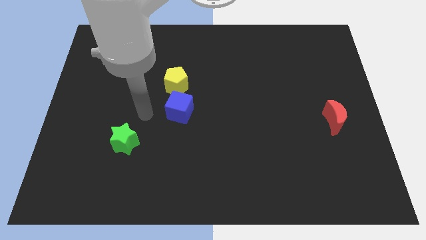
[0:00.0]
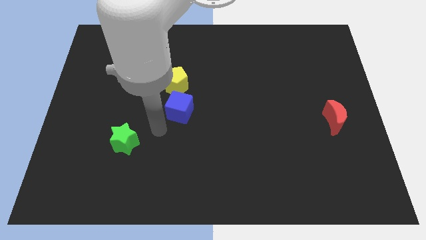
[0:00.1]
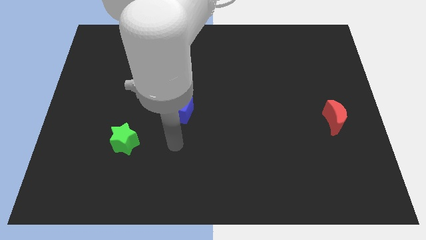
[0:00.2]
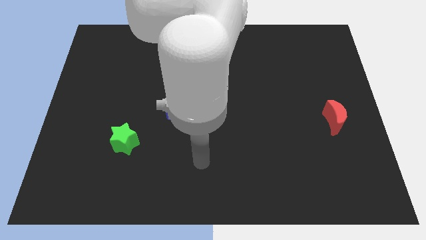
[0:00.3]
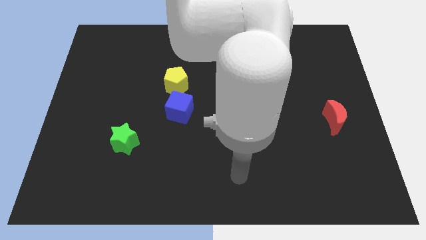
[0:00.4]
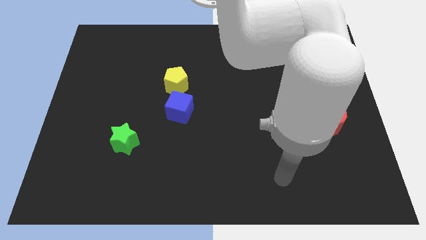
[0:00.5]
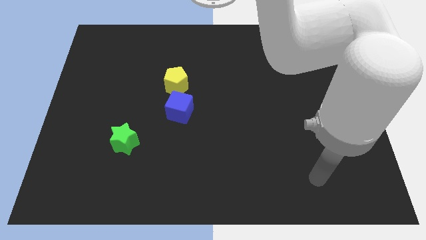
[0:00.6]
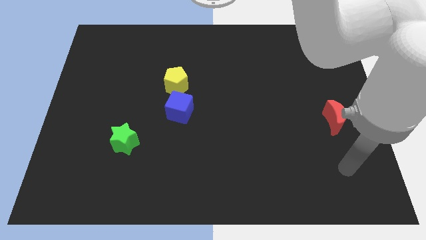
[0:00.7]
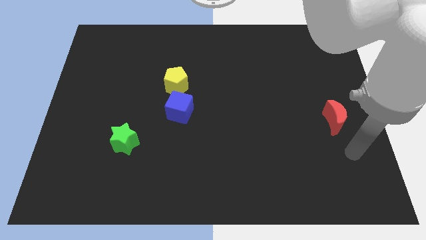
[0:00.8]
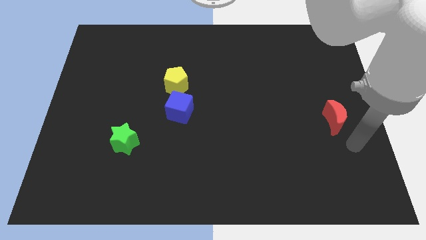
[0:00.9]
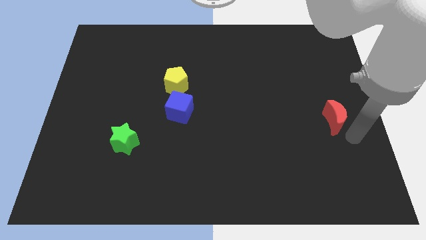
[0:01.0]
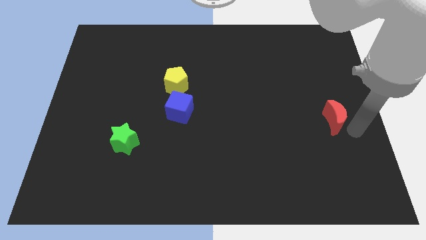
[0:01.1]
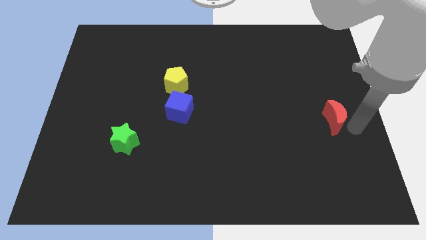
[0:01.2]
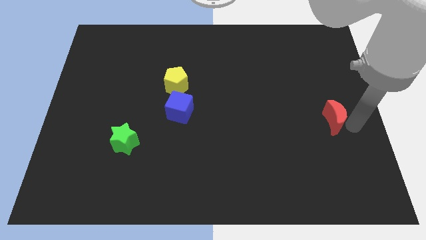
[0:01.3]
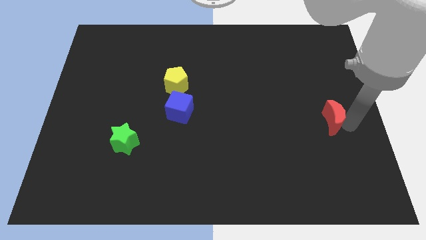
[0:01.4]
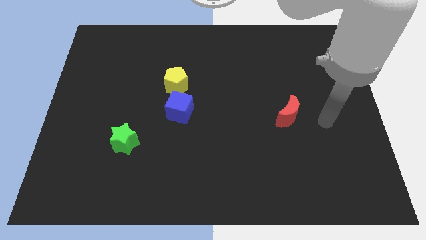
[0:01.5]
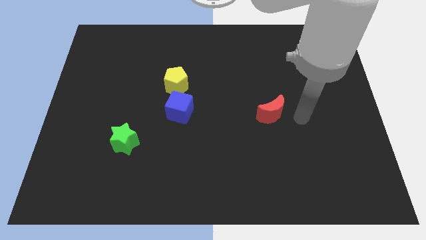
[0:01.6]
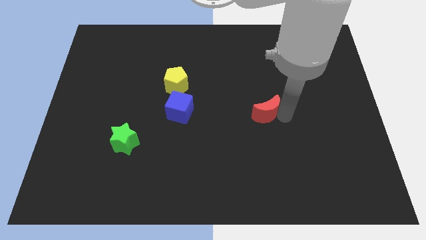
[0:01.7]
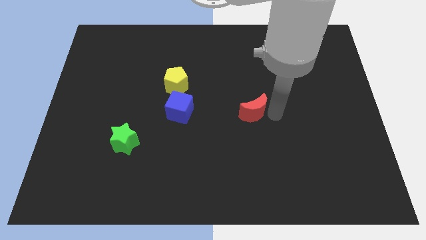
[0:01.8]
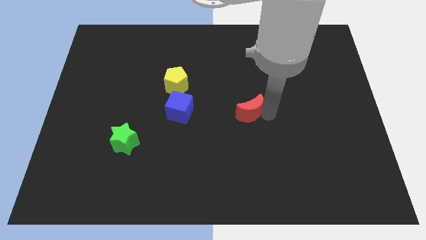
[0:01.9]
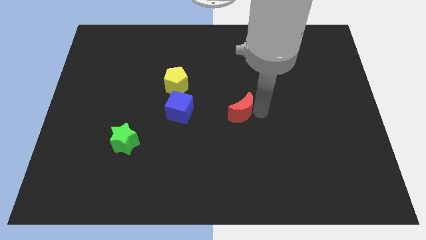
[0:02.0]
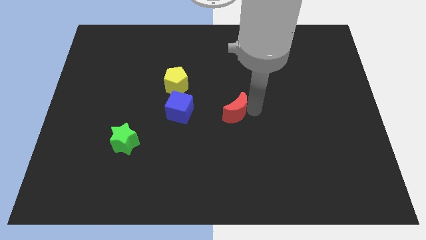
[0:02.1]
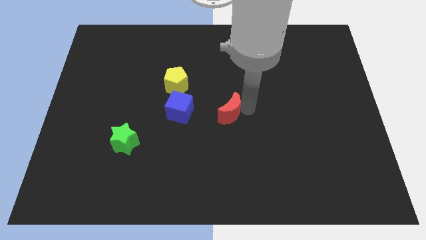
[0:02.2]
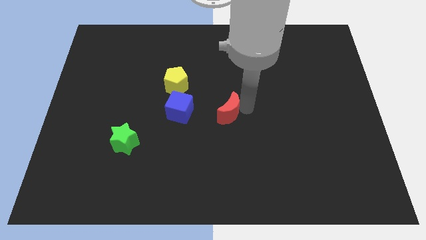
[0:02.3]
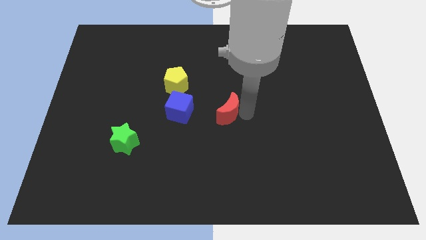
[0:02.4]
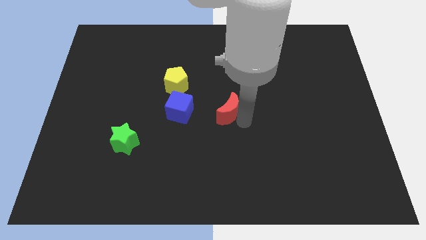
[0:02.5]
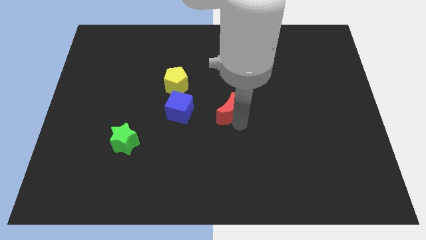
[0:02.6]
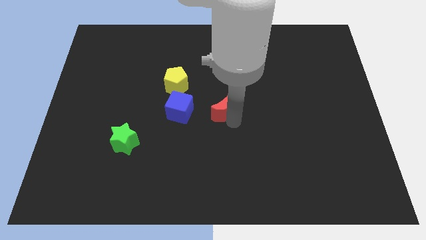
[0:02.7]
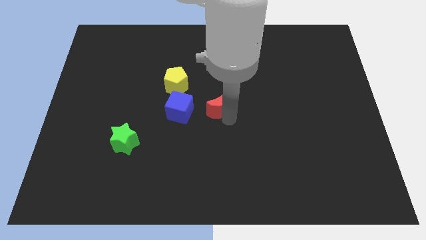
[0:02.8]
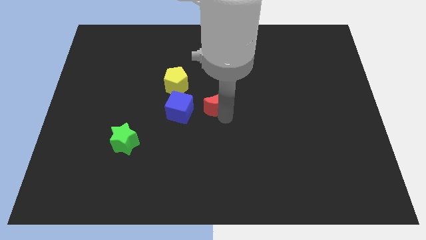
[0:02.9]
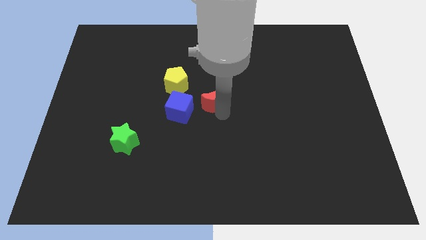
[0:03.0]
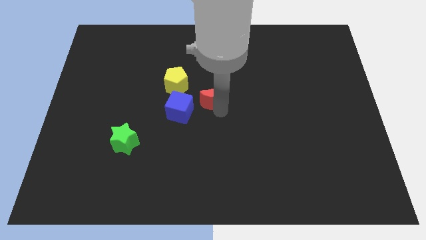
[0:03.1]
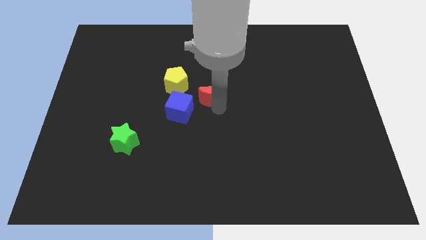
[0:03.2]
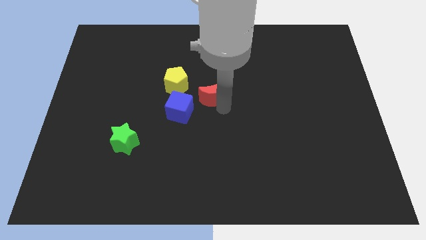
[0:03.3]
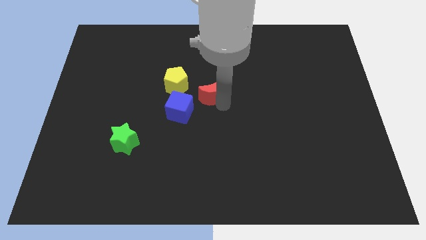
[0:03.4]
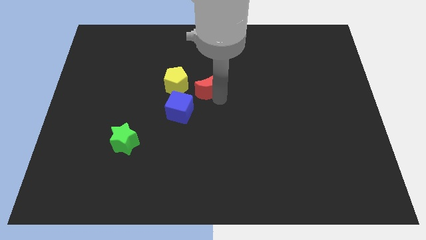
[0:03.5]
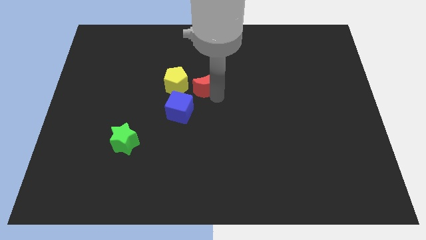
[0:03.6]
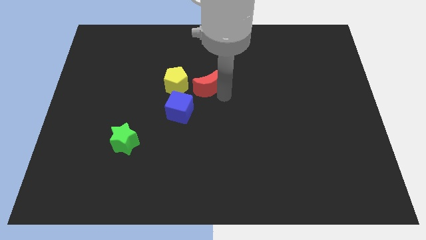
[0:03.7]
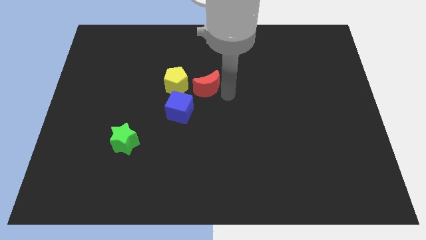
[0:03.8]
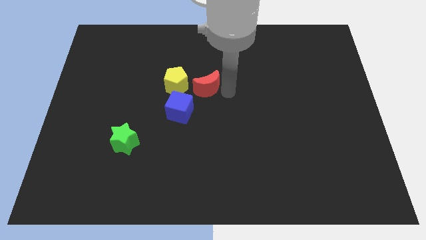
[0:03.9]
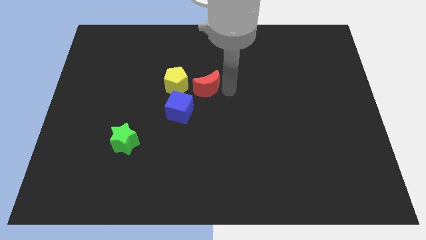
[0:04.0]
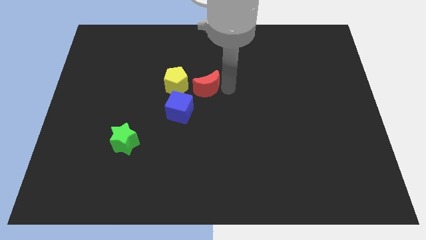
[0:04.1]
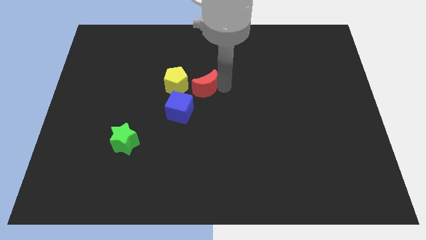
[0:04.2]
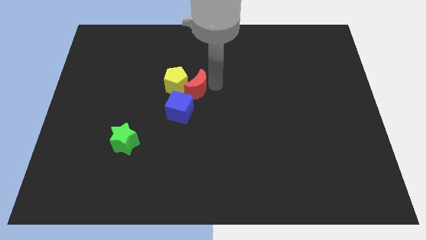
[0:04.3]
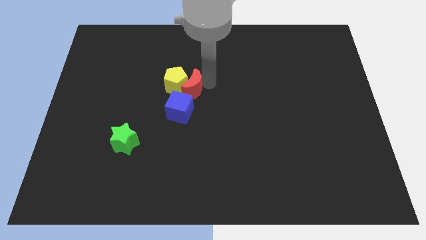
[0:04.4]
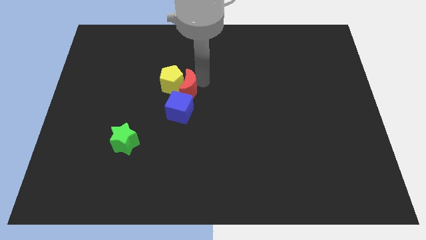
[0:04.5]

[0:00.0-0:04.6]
push the red moon next to the yellow pentagon

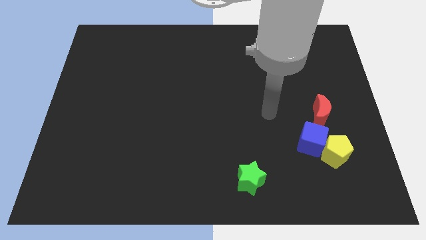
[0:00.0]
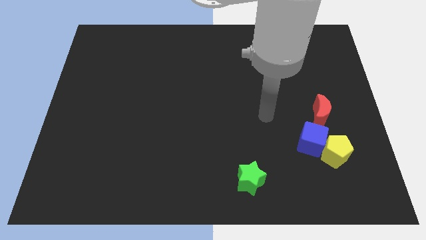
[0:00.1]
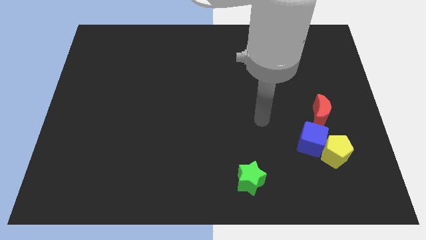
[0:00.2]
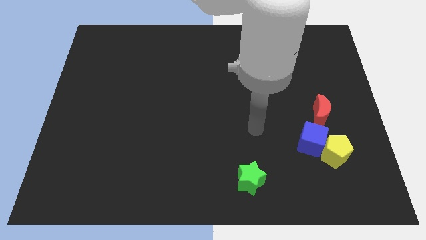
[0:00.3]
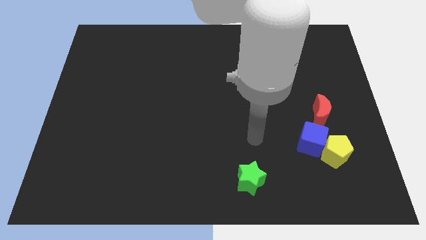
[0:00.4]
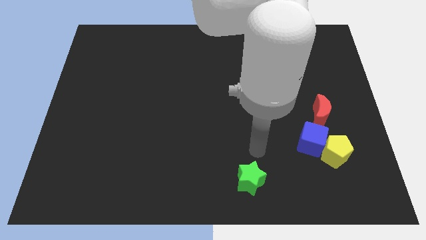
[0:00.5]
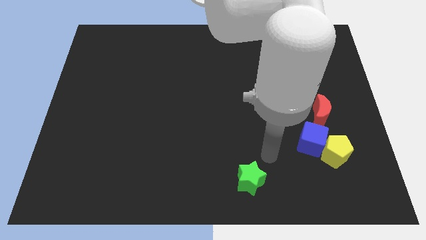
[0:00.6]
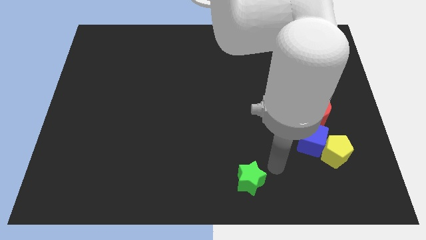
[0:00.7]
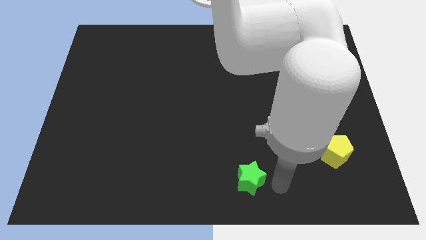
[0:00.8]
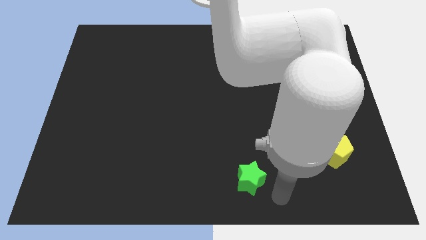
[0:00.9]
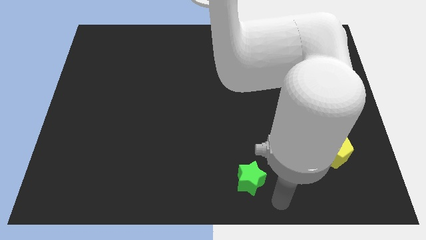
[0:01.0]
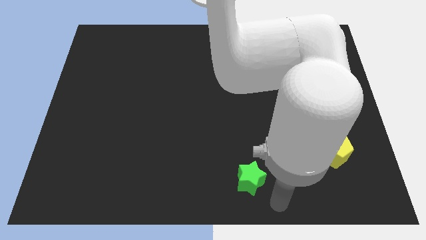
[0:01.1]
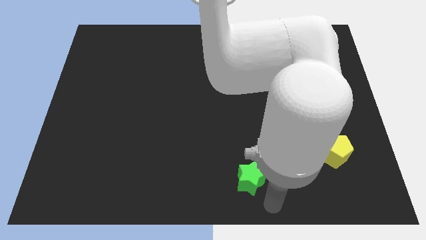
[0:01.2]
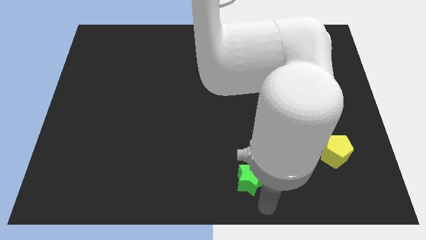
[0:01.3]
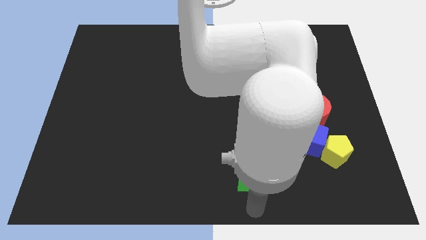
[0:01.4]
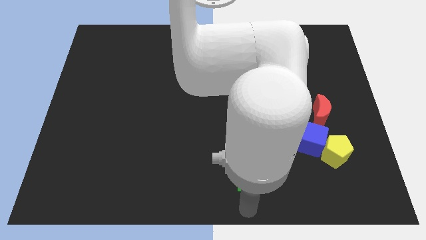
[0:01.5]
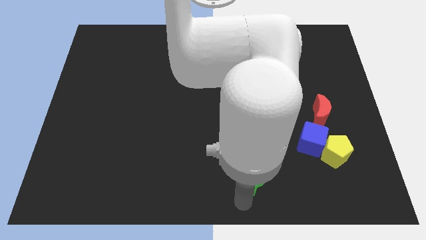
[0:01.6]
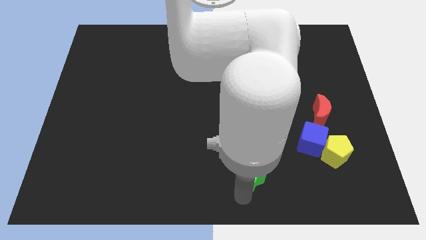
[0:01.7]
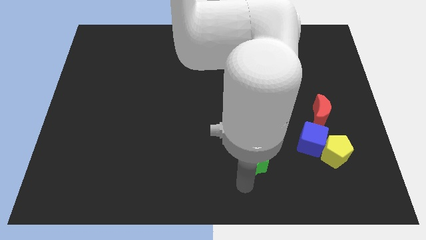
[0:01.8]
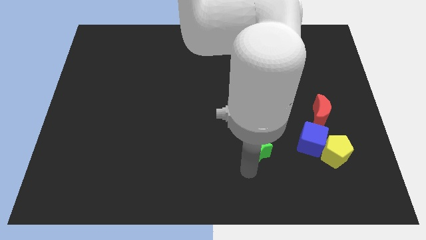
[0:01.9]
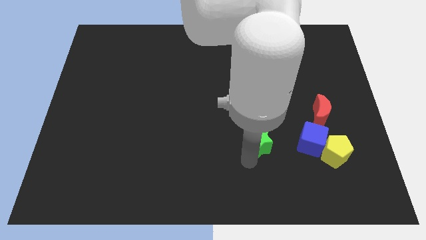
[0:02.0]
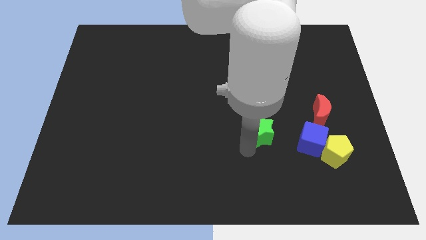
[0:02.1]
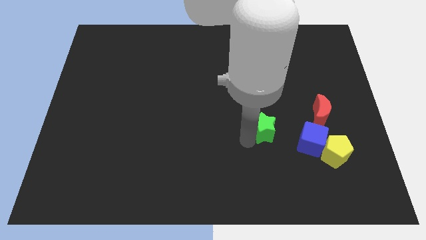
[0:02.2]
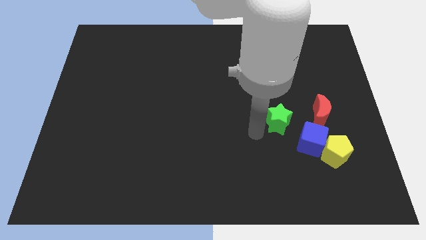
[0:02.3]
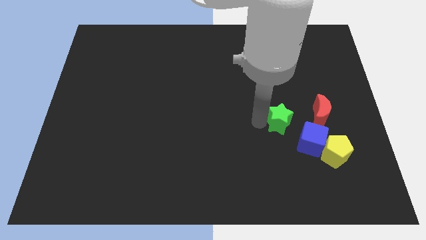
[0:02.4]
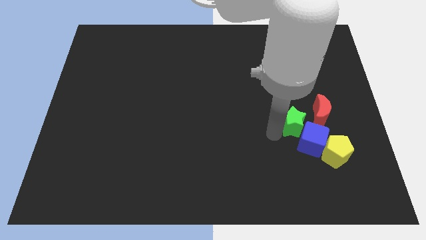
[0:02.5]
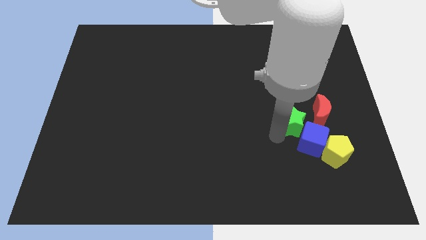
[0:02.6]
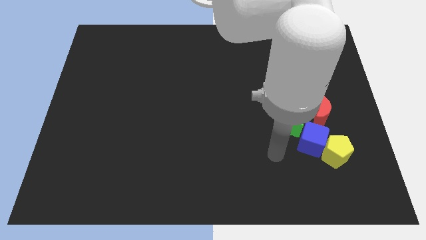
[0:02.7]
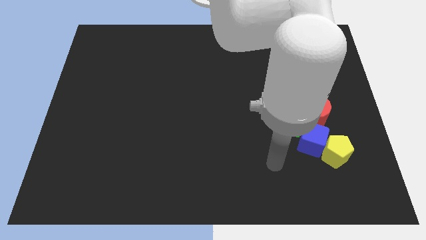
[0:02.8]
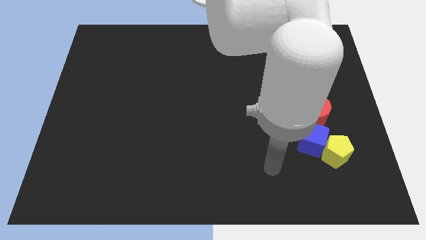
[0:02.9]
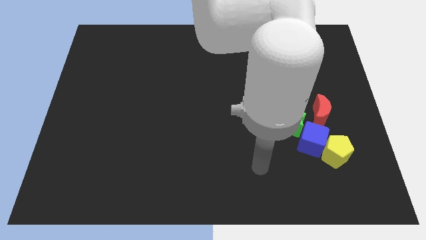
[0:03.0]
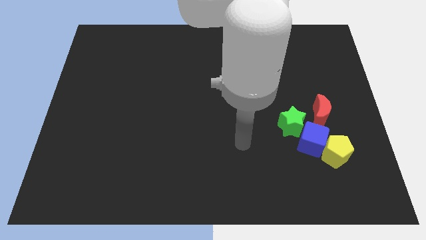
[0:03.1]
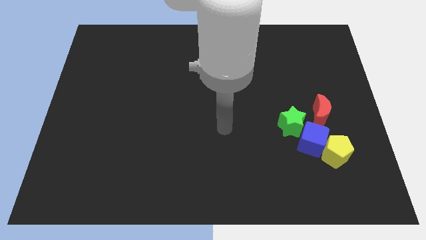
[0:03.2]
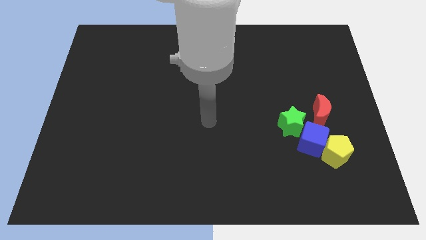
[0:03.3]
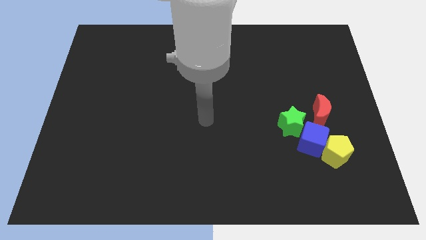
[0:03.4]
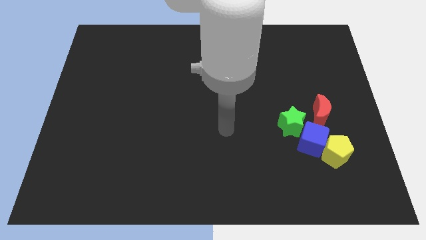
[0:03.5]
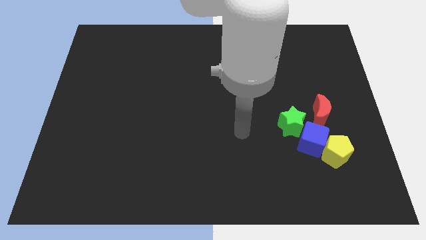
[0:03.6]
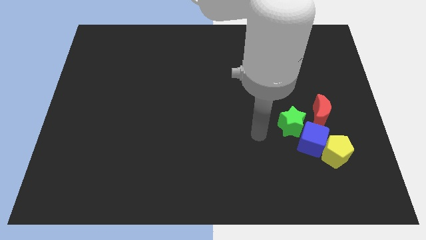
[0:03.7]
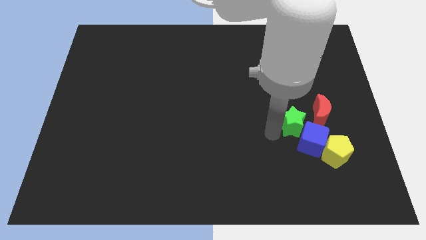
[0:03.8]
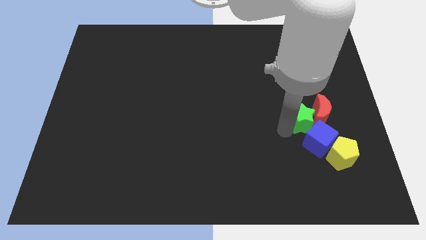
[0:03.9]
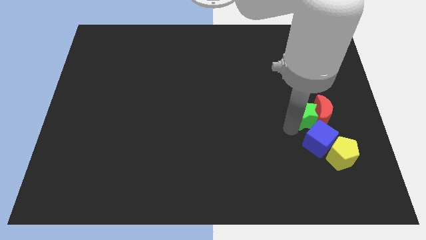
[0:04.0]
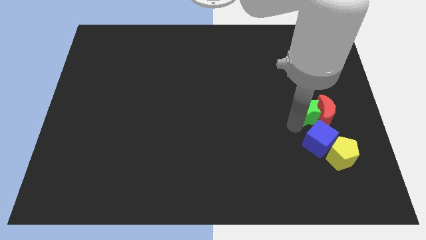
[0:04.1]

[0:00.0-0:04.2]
move the green star to the moon
